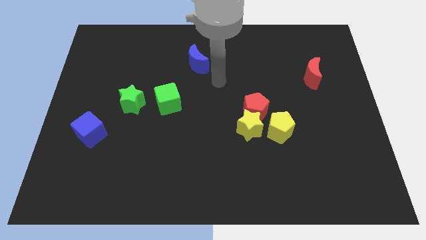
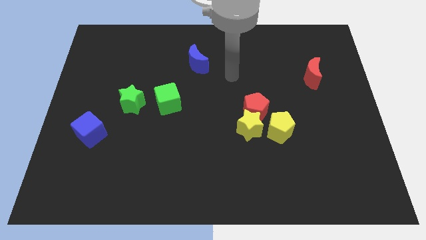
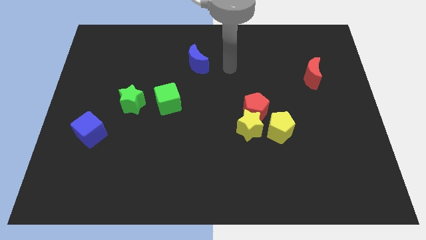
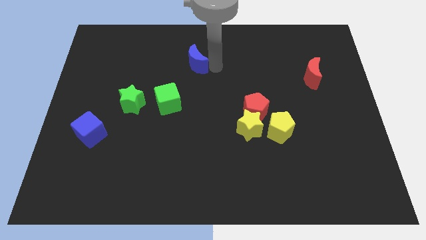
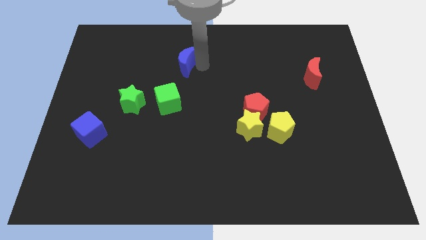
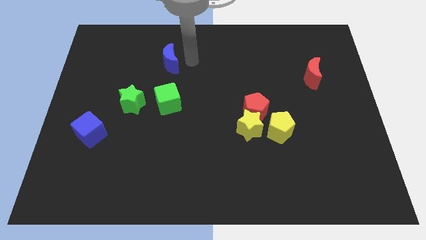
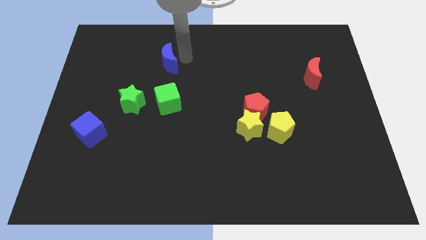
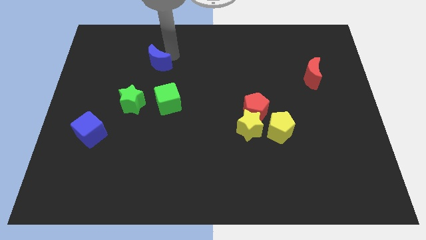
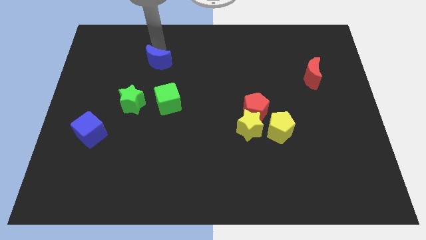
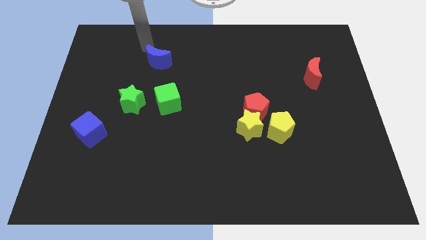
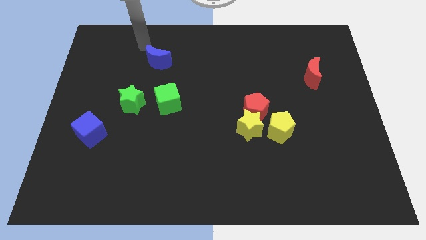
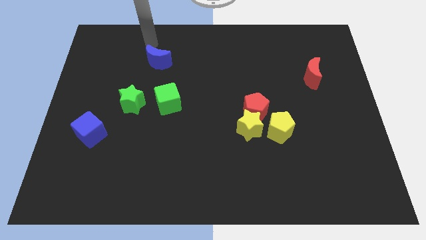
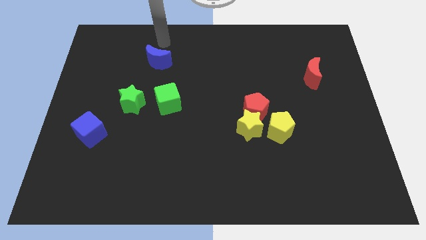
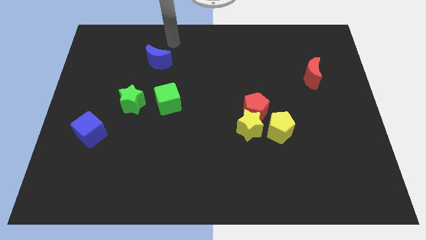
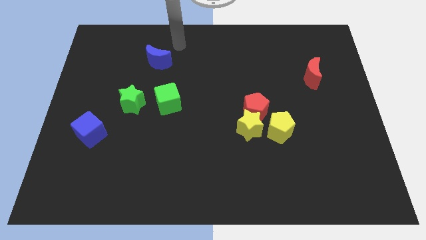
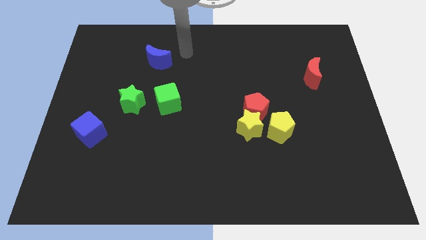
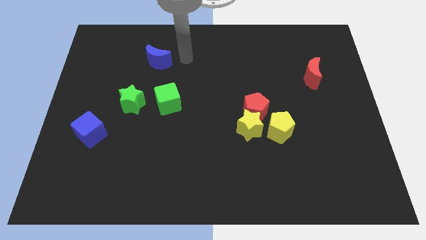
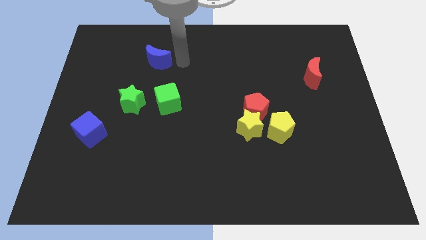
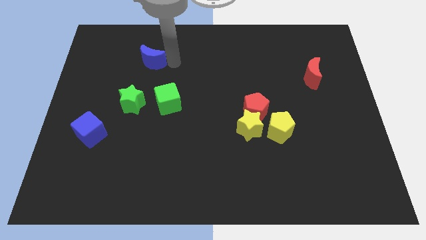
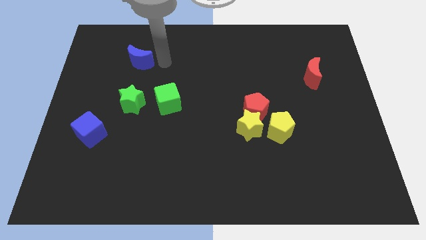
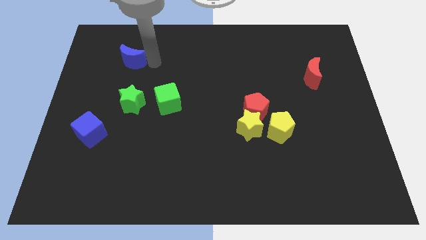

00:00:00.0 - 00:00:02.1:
push the blue crescent to the left of the board

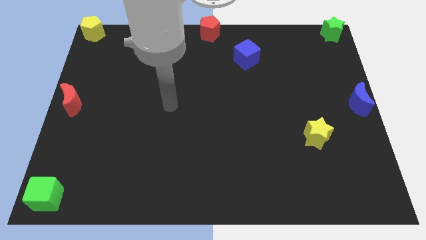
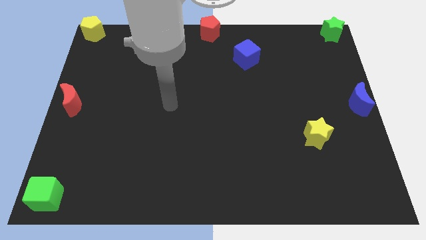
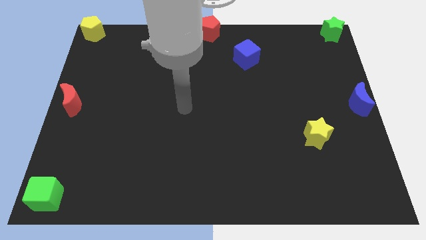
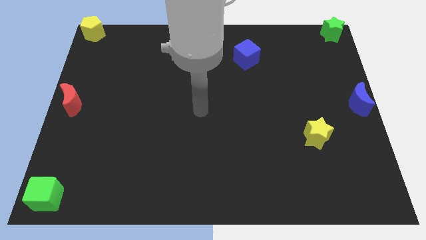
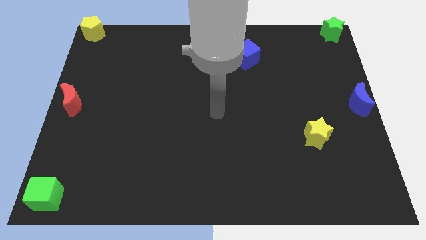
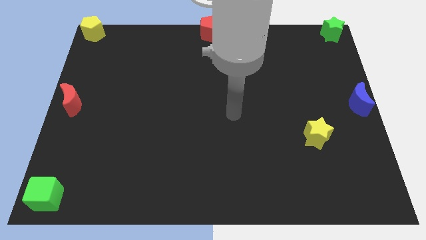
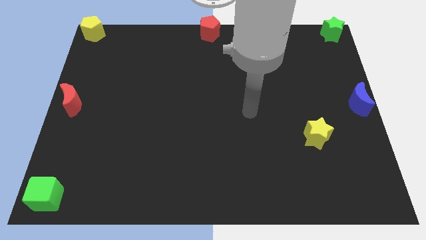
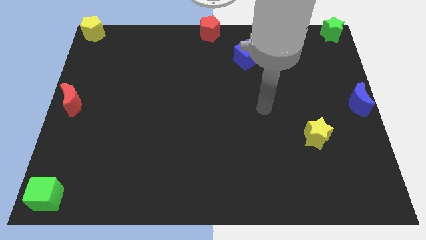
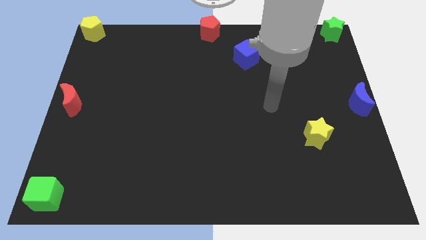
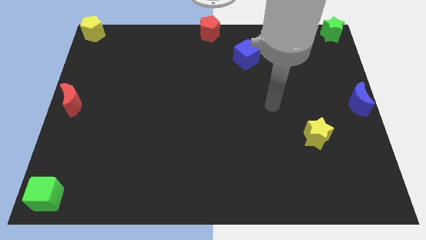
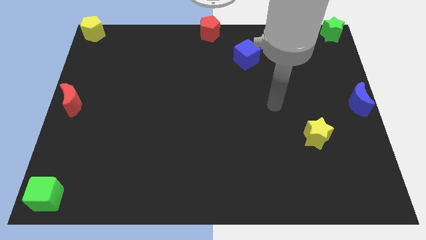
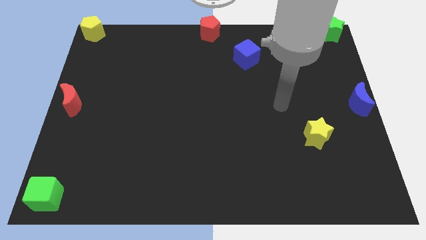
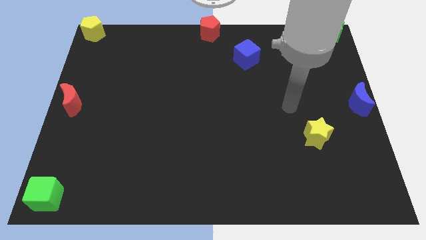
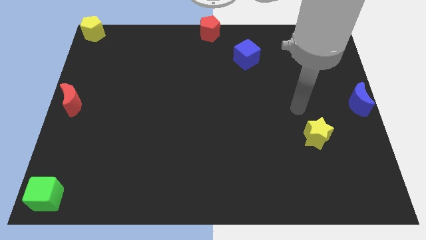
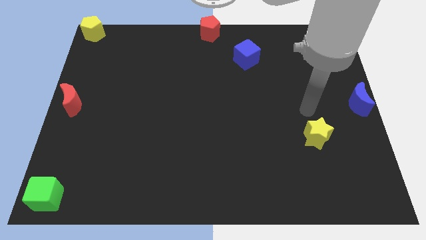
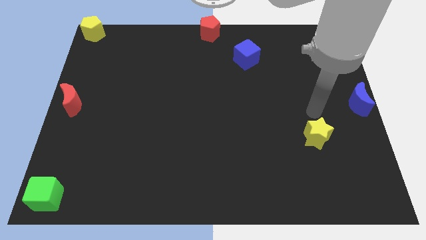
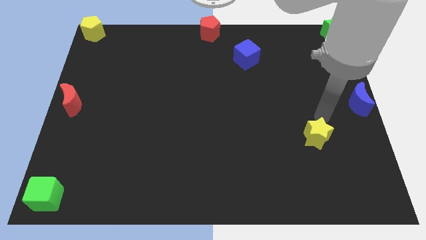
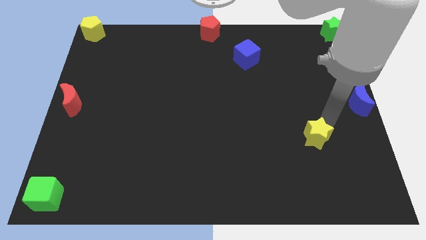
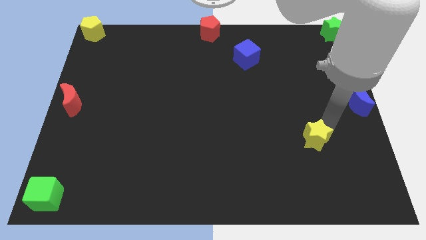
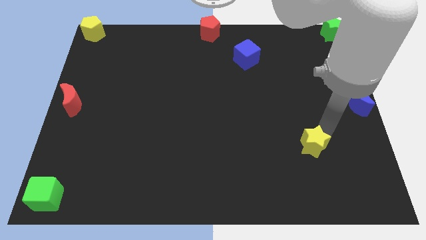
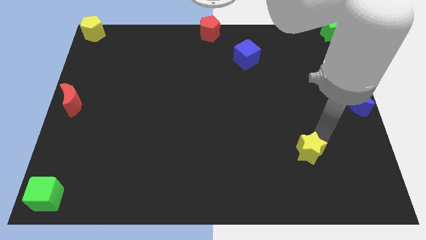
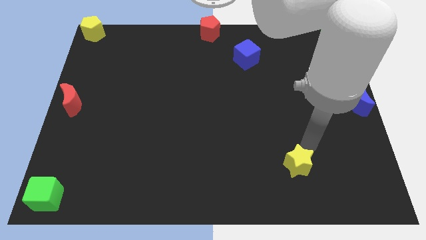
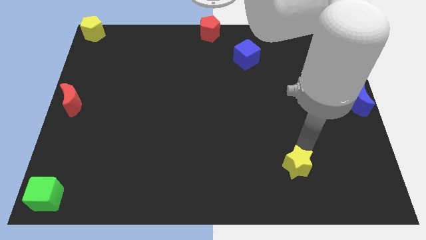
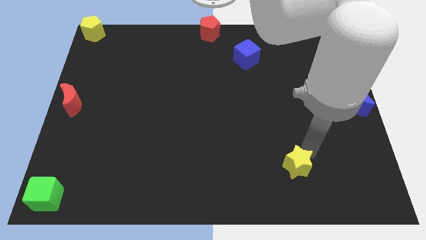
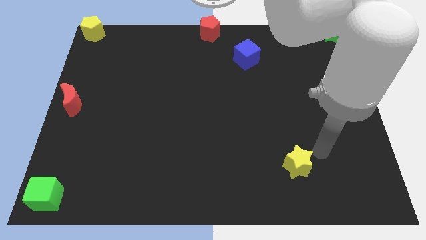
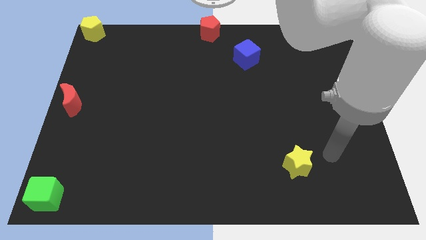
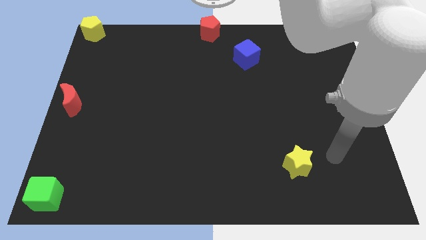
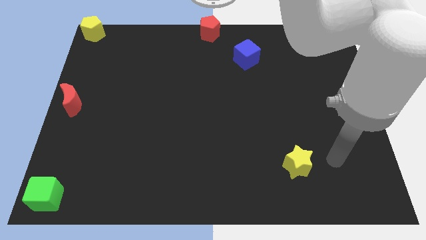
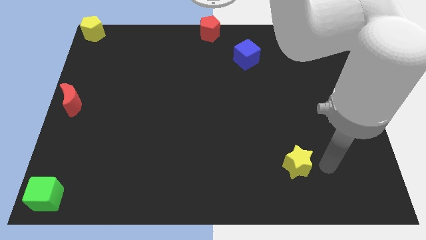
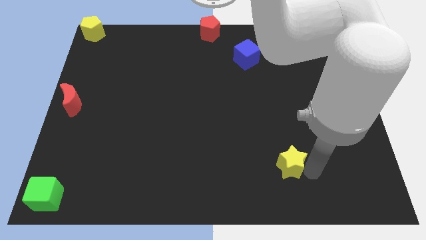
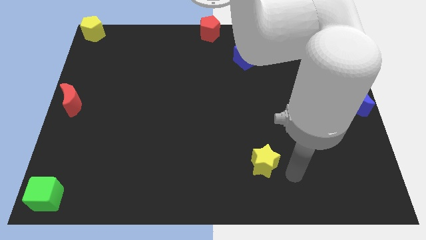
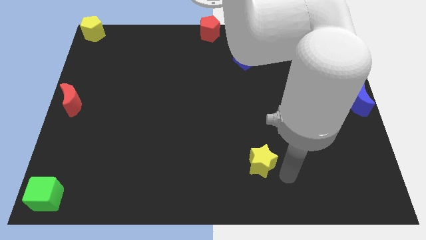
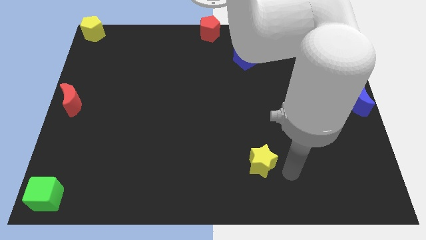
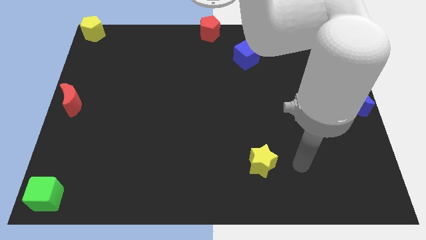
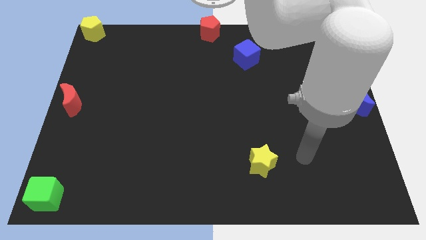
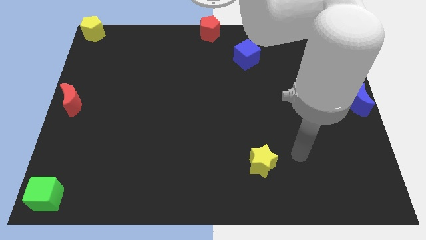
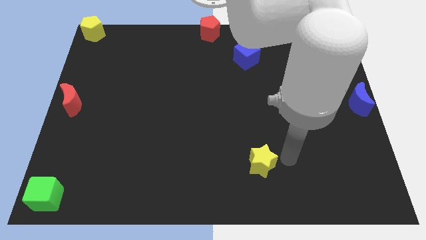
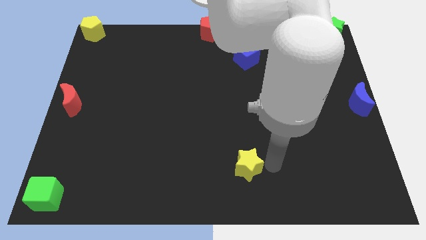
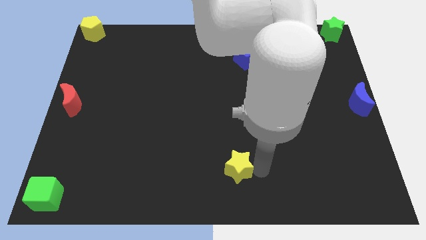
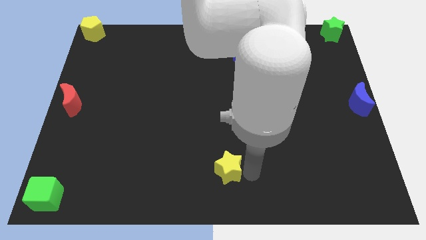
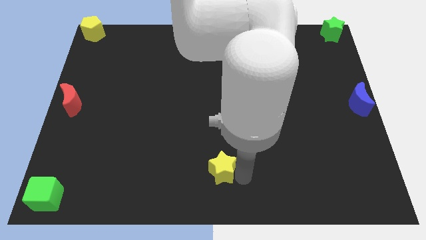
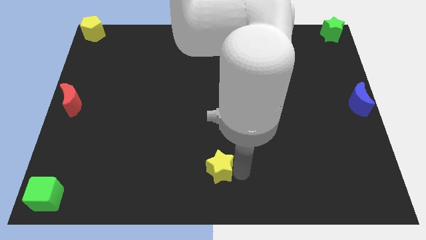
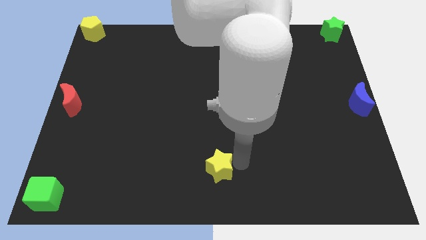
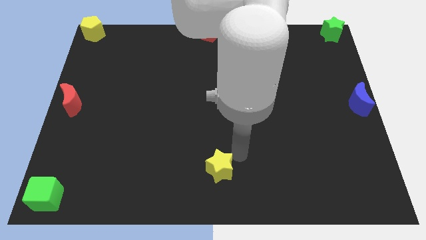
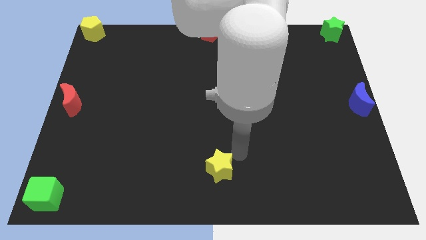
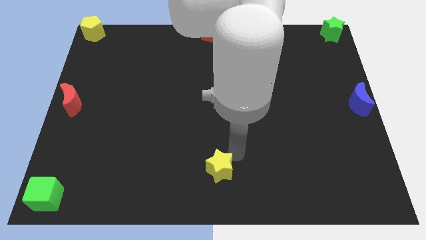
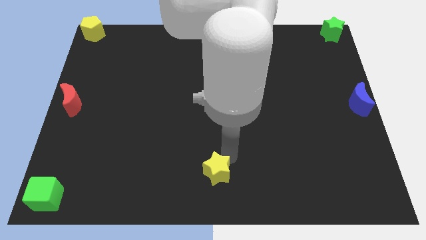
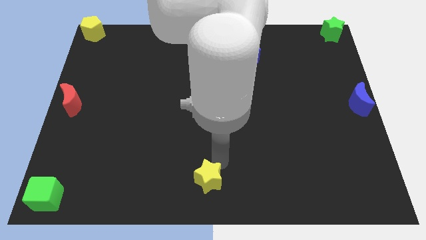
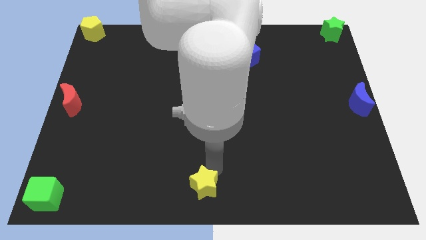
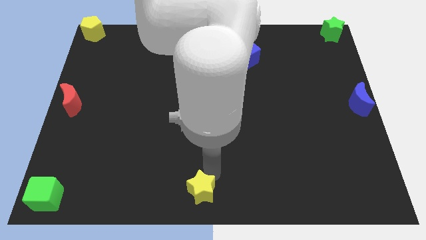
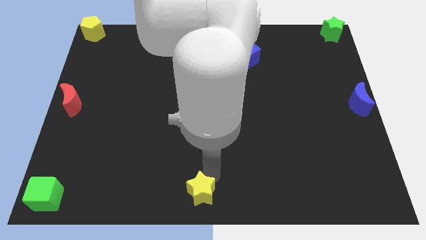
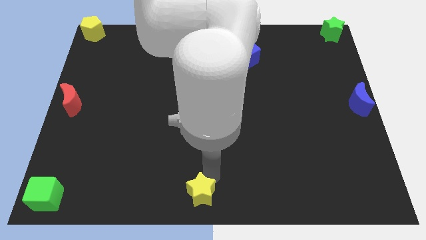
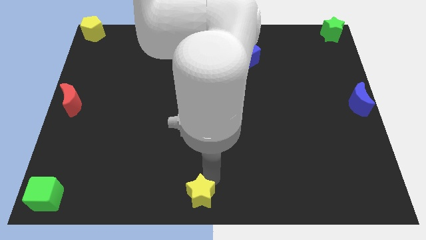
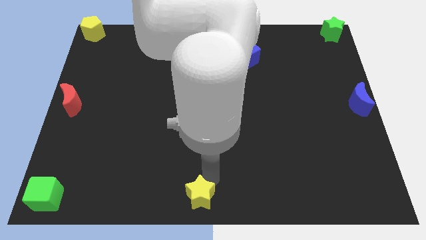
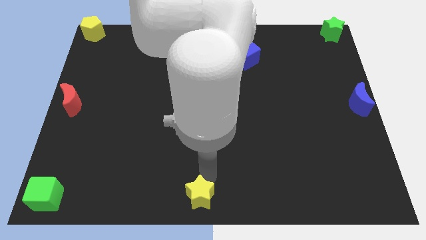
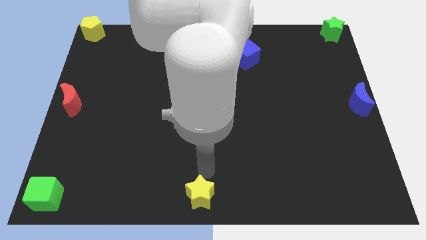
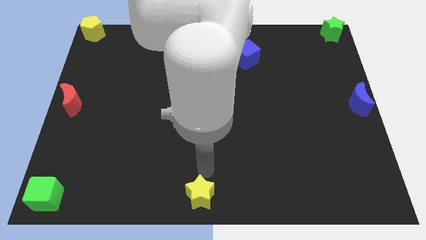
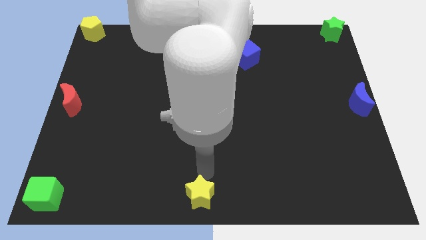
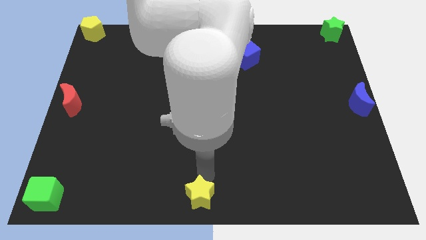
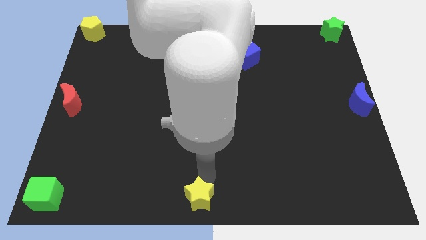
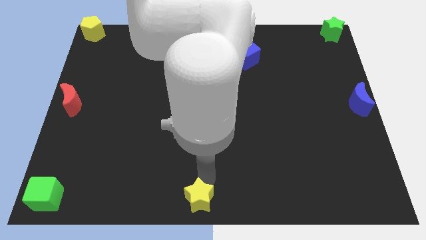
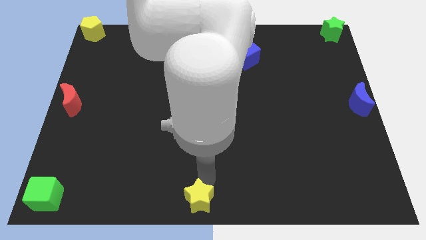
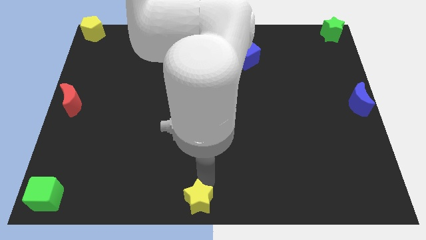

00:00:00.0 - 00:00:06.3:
push the yellow star to the bottom center of the board

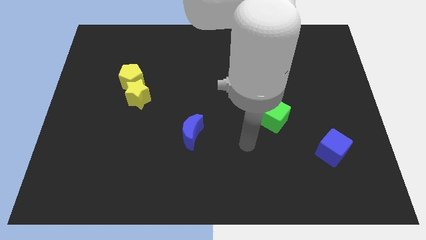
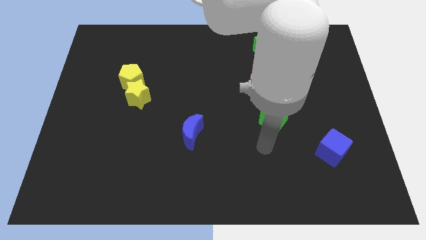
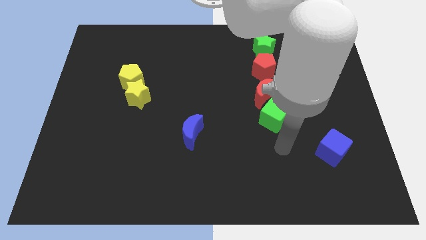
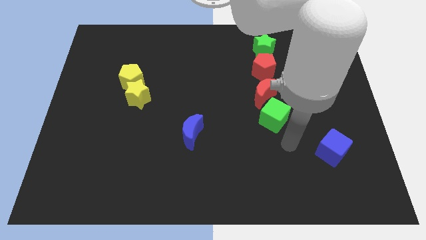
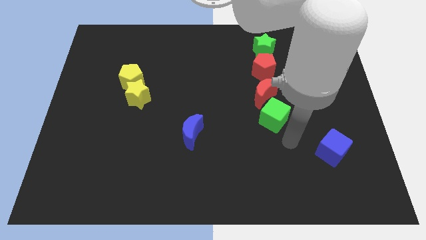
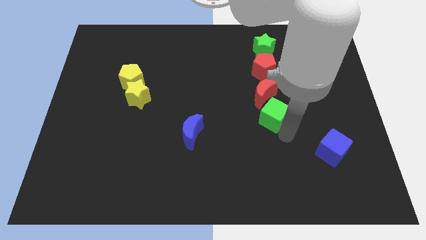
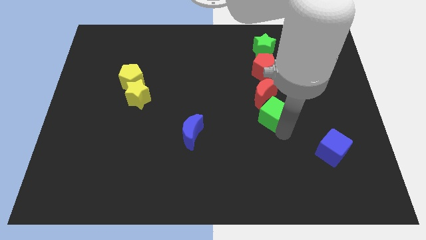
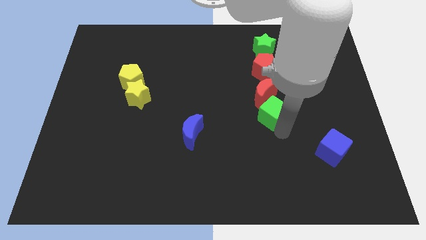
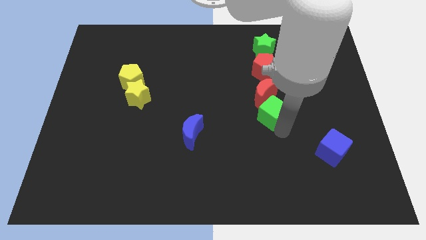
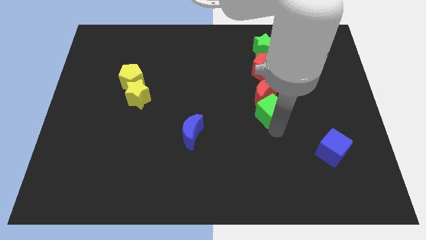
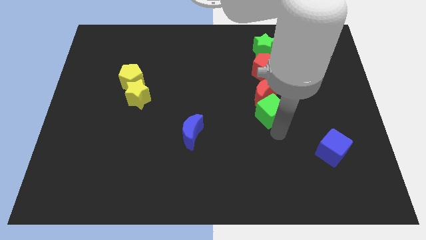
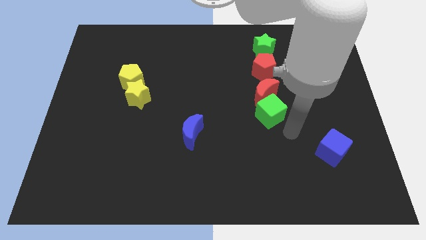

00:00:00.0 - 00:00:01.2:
push the green cube below the red crescent
